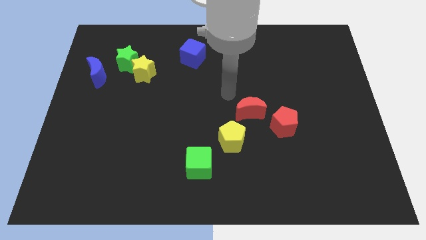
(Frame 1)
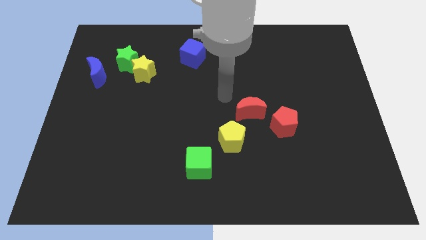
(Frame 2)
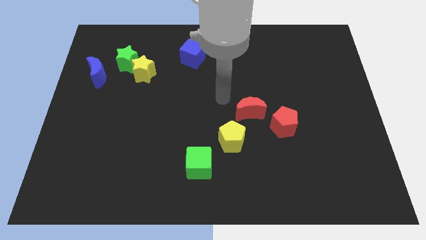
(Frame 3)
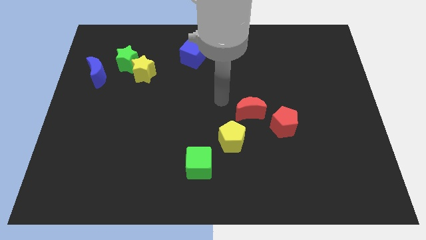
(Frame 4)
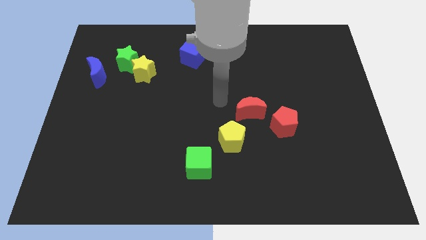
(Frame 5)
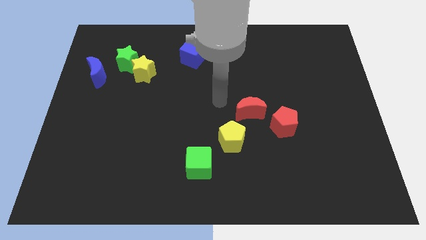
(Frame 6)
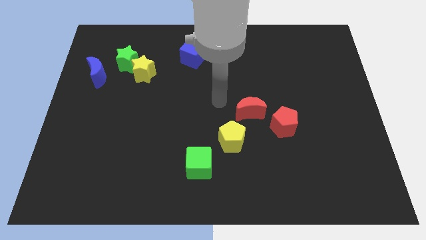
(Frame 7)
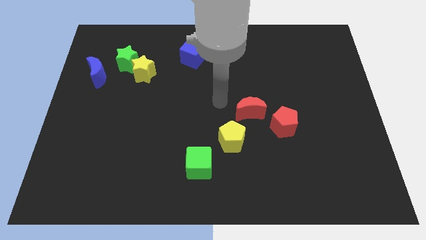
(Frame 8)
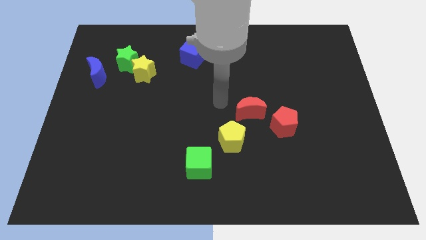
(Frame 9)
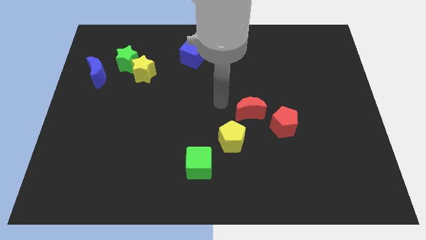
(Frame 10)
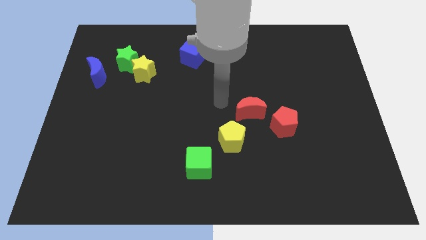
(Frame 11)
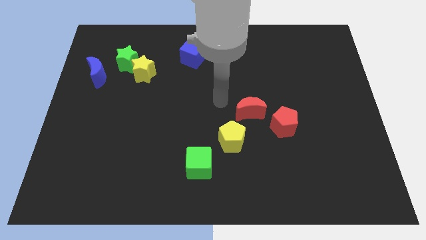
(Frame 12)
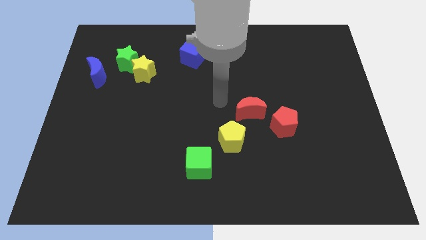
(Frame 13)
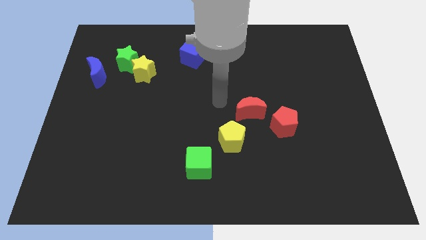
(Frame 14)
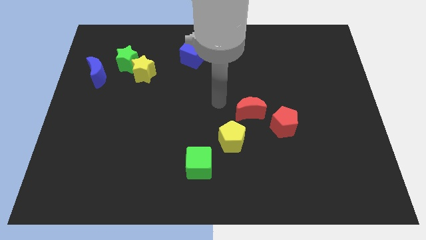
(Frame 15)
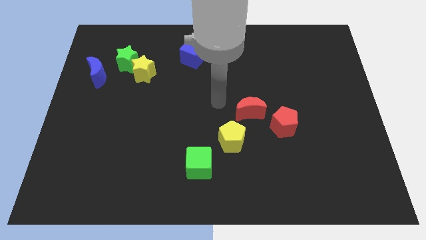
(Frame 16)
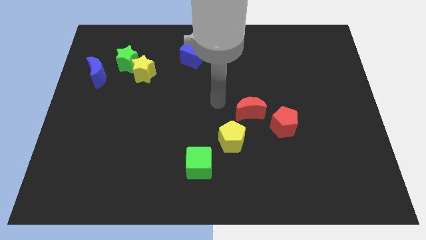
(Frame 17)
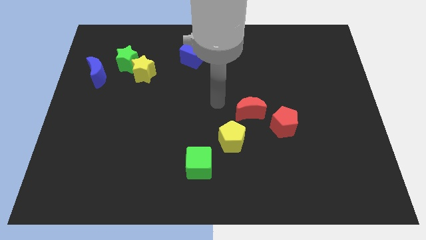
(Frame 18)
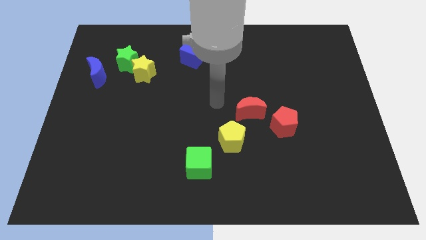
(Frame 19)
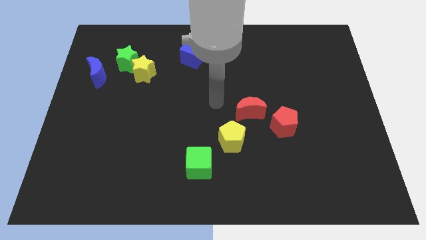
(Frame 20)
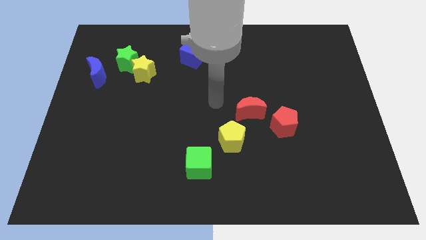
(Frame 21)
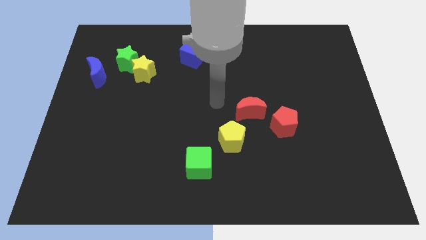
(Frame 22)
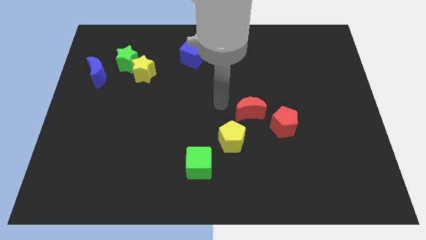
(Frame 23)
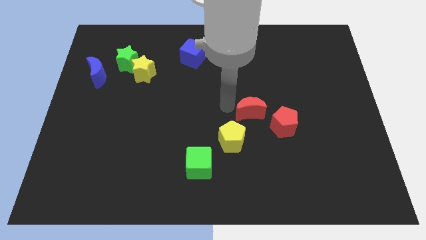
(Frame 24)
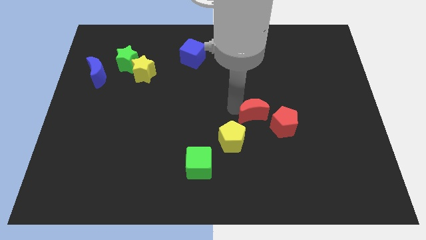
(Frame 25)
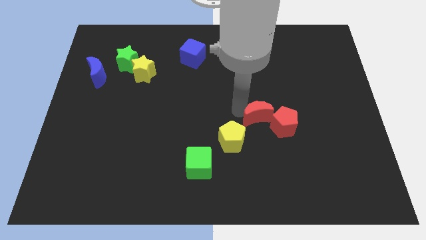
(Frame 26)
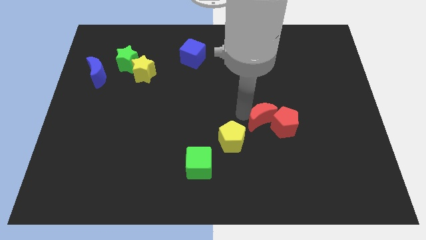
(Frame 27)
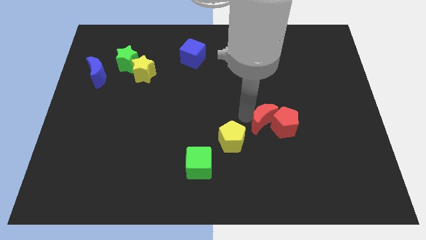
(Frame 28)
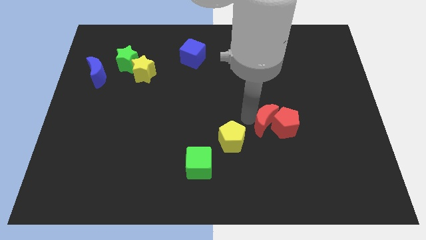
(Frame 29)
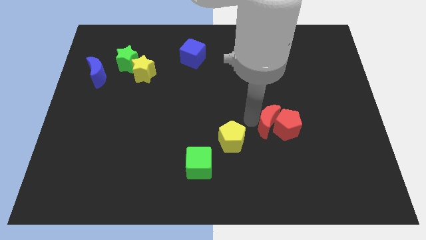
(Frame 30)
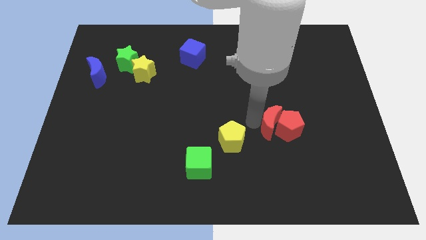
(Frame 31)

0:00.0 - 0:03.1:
push the red crescent into the red pentagon

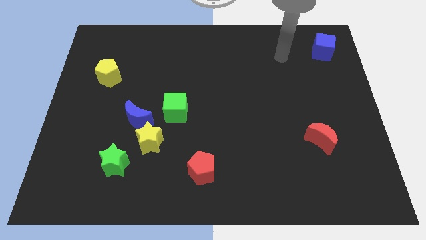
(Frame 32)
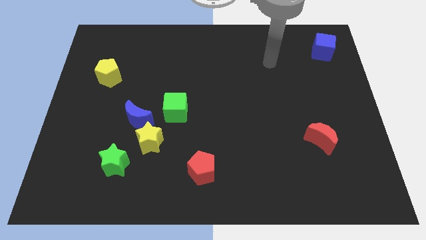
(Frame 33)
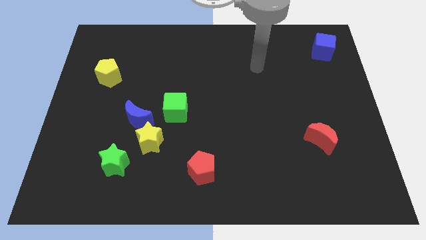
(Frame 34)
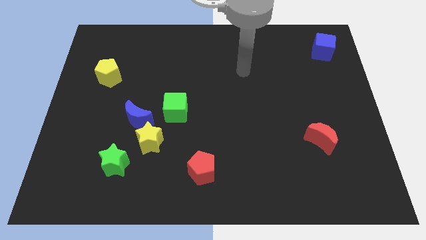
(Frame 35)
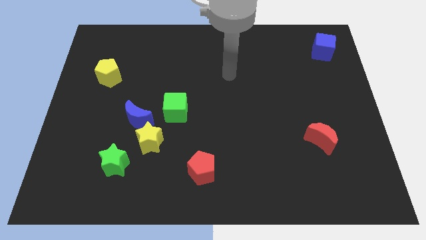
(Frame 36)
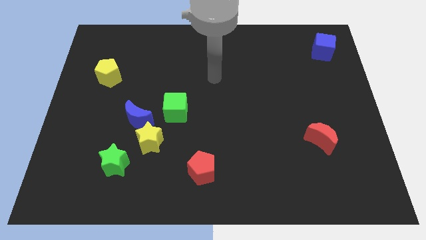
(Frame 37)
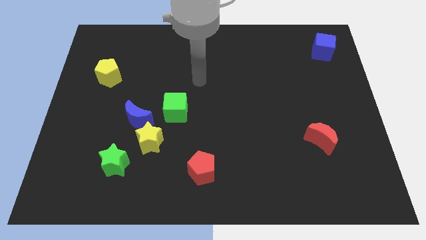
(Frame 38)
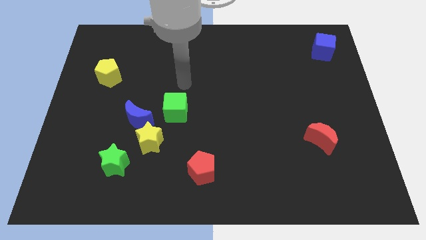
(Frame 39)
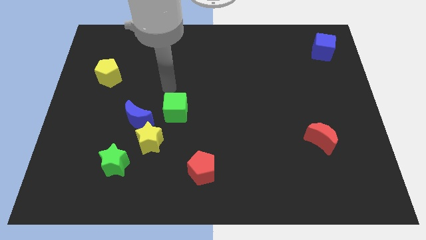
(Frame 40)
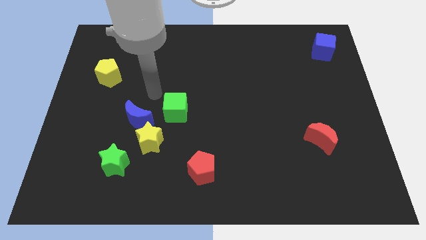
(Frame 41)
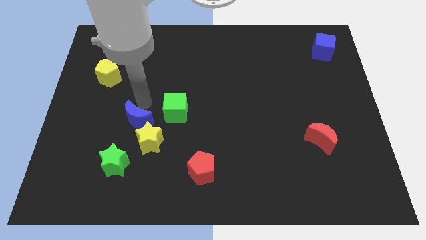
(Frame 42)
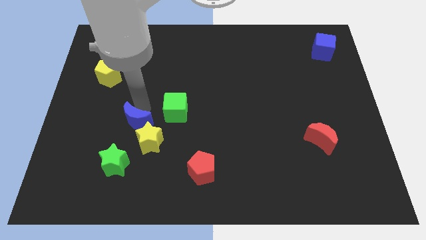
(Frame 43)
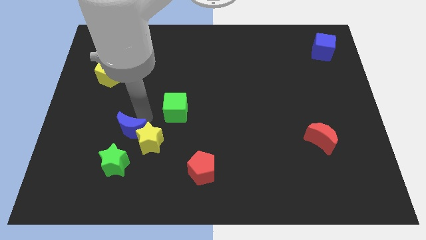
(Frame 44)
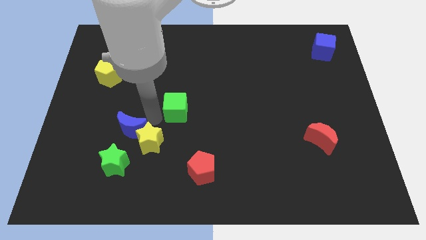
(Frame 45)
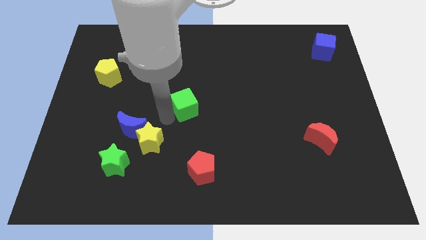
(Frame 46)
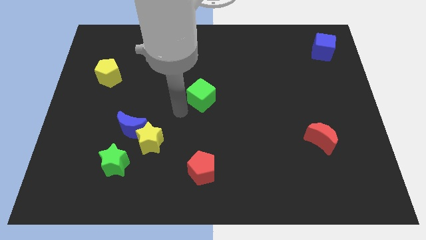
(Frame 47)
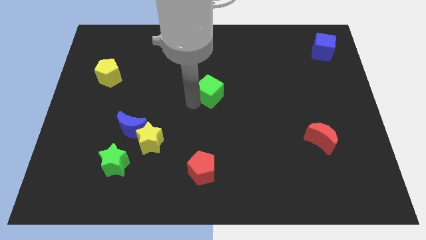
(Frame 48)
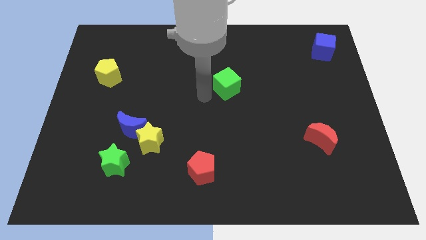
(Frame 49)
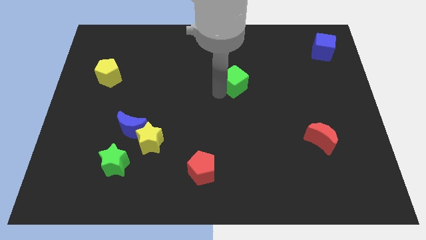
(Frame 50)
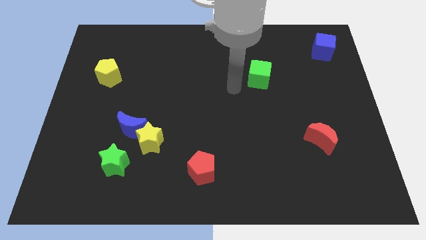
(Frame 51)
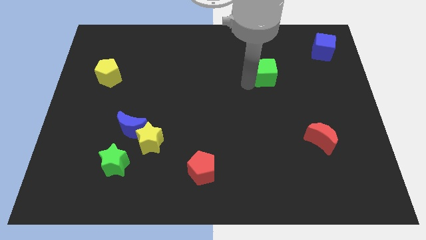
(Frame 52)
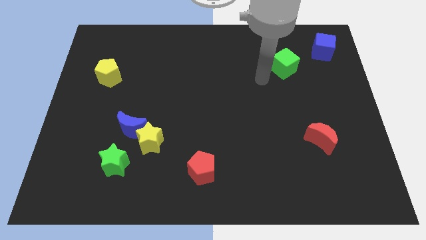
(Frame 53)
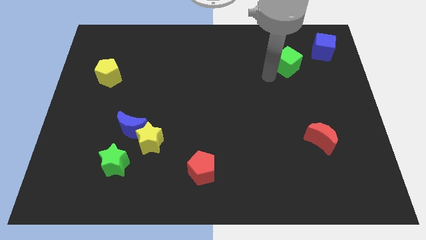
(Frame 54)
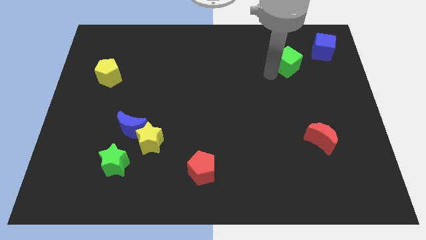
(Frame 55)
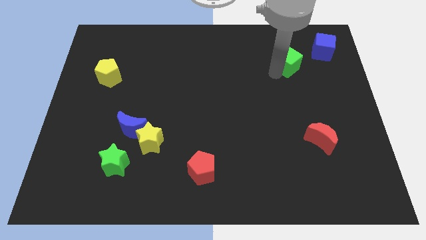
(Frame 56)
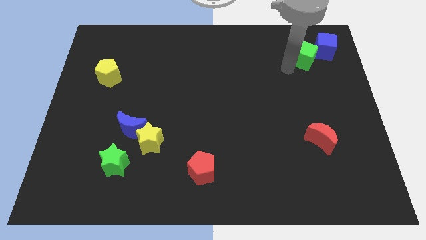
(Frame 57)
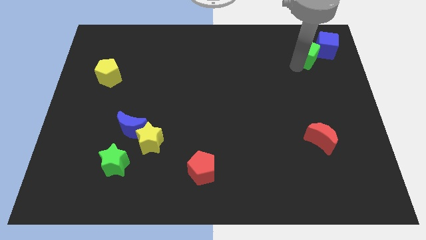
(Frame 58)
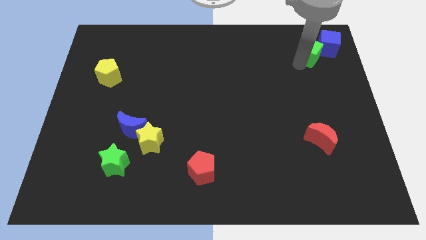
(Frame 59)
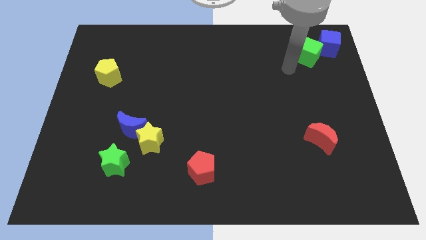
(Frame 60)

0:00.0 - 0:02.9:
move the green cube into the blue cube

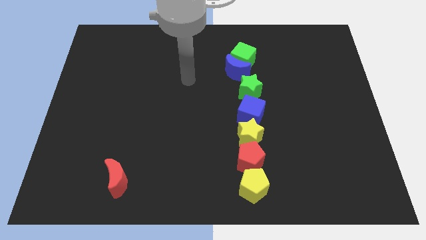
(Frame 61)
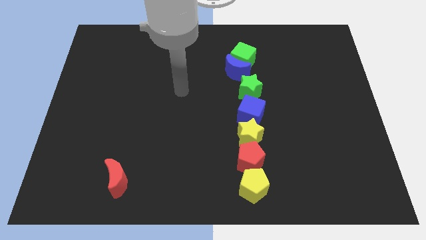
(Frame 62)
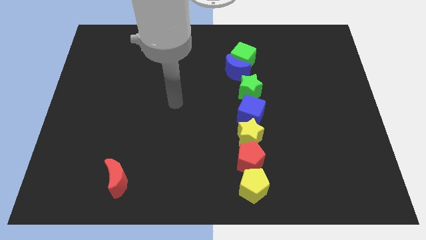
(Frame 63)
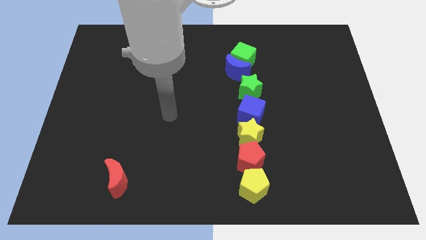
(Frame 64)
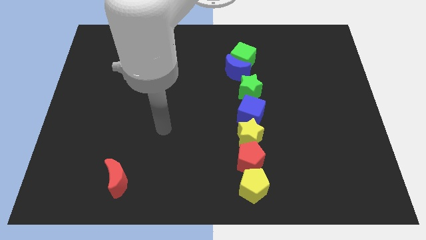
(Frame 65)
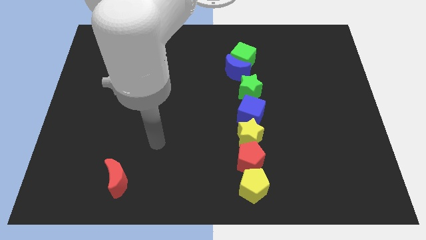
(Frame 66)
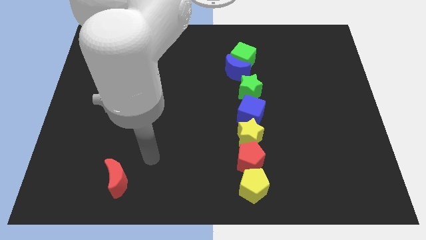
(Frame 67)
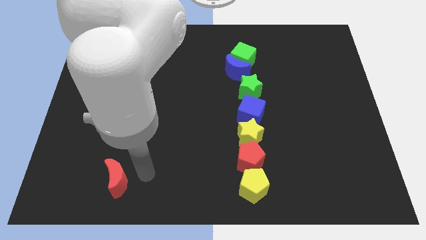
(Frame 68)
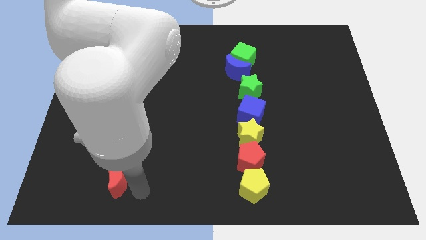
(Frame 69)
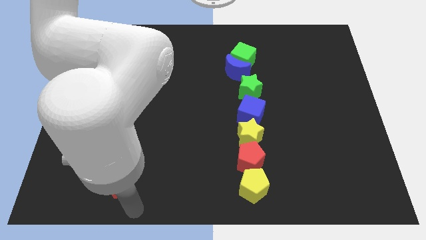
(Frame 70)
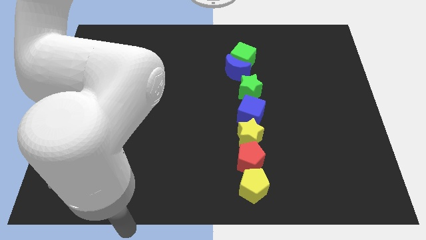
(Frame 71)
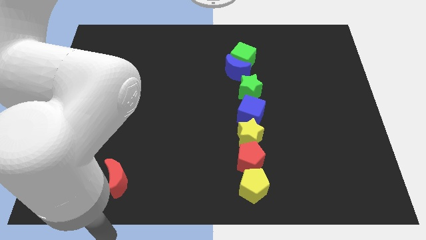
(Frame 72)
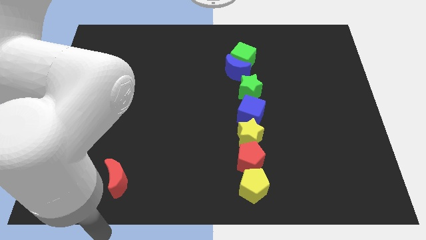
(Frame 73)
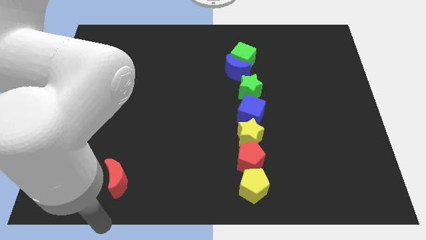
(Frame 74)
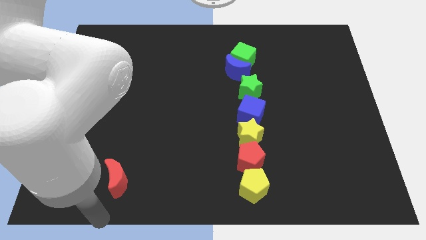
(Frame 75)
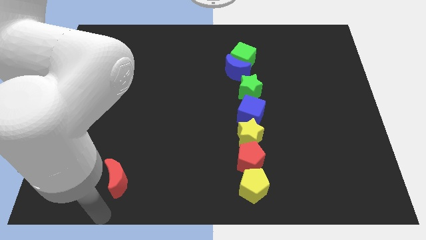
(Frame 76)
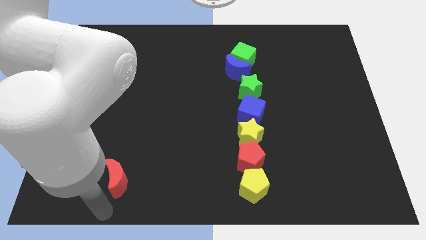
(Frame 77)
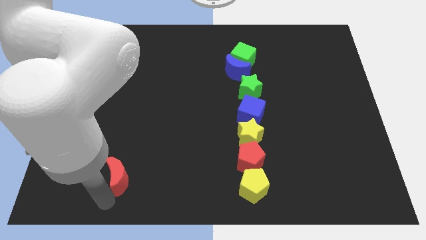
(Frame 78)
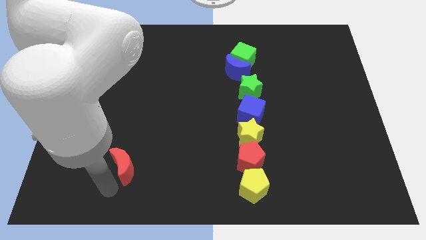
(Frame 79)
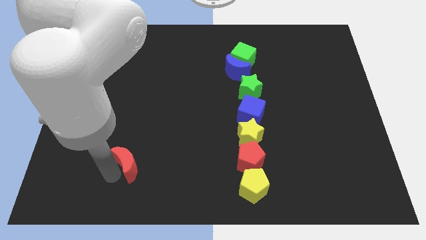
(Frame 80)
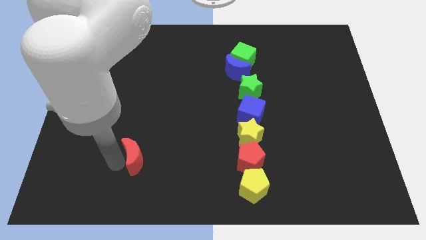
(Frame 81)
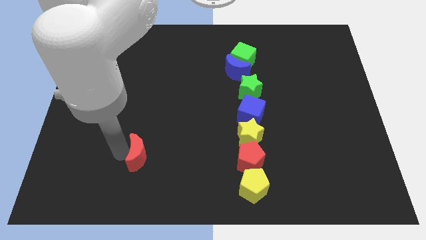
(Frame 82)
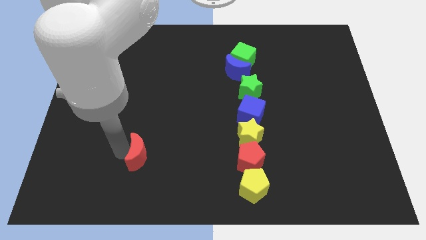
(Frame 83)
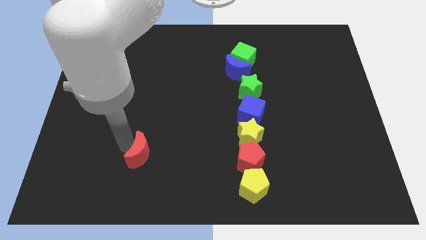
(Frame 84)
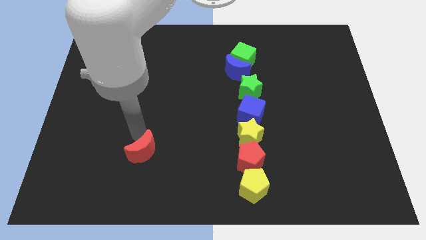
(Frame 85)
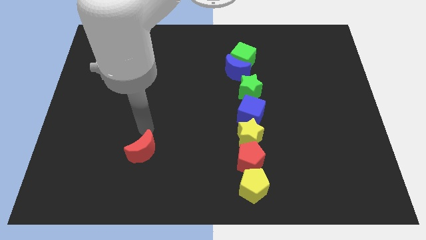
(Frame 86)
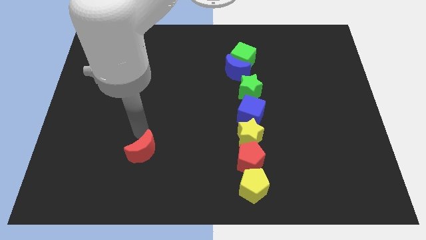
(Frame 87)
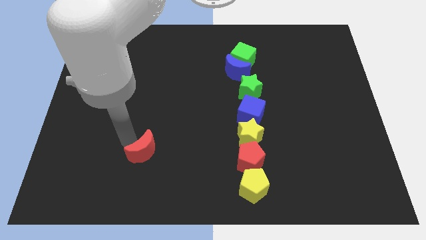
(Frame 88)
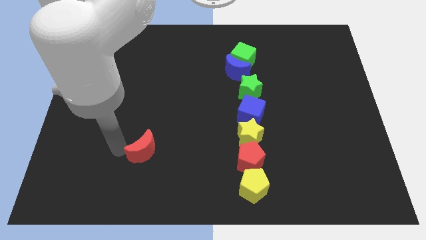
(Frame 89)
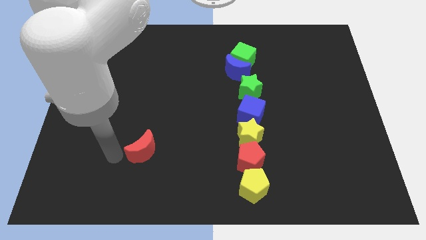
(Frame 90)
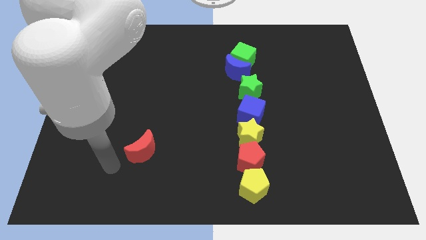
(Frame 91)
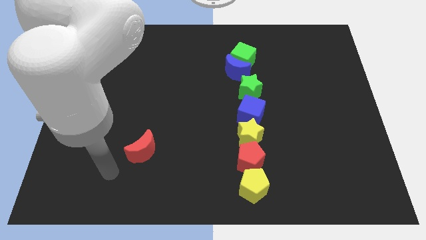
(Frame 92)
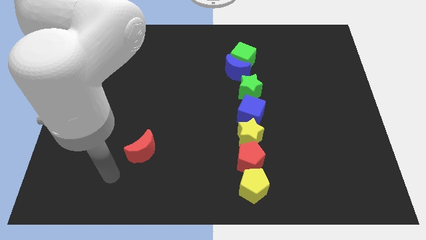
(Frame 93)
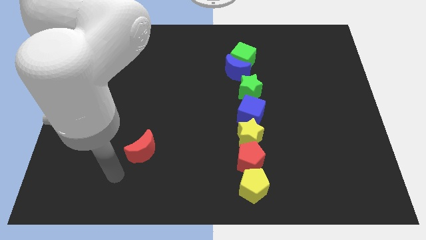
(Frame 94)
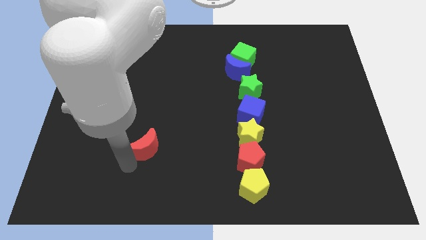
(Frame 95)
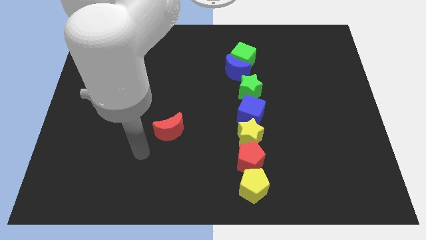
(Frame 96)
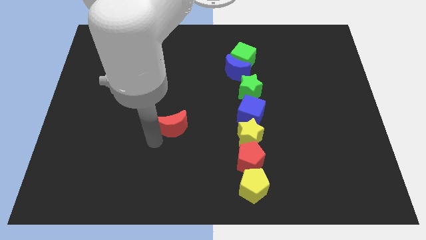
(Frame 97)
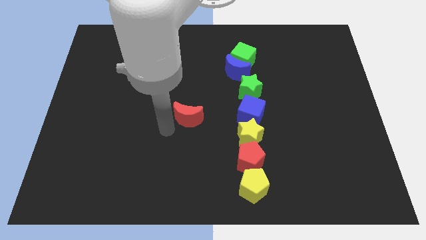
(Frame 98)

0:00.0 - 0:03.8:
move the red moon near to the left side of the blue cube
